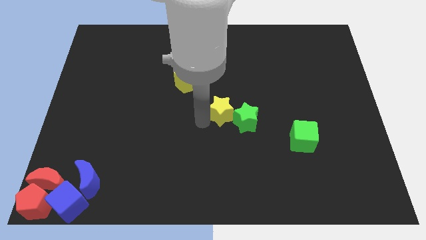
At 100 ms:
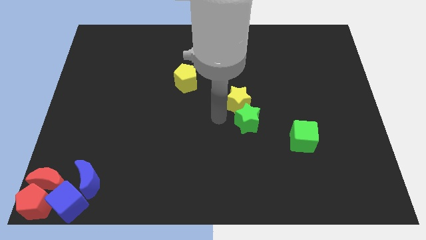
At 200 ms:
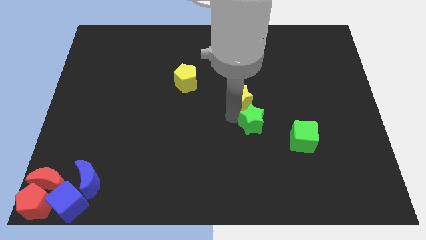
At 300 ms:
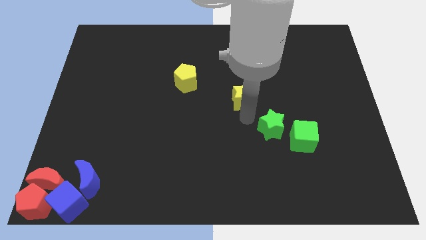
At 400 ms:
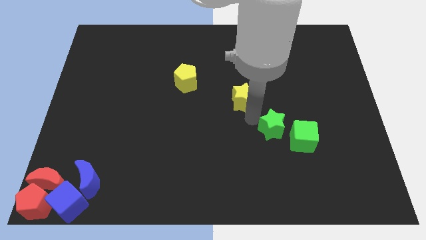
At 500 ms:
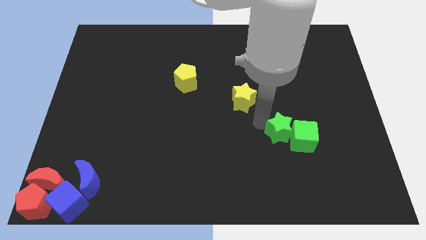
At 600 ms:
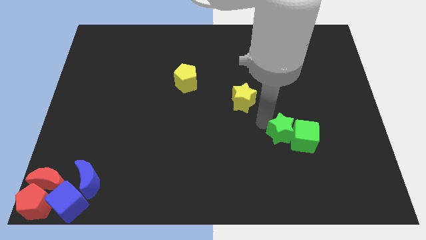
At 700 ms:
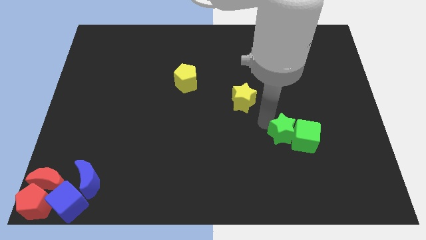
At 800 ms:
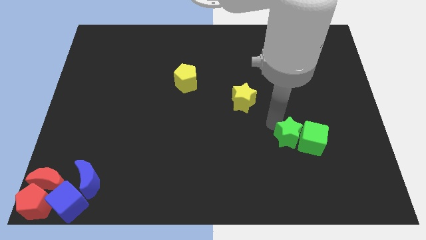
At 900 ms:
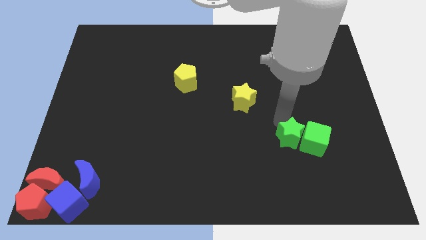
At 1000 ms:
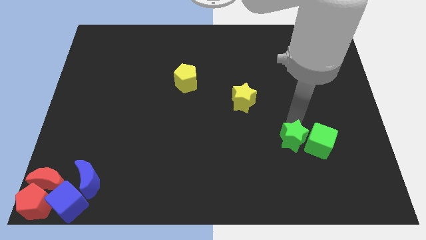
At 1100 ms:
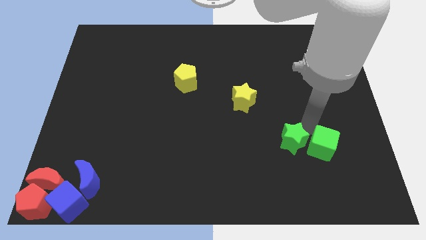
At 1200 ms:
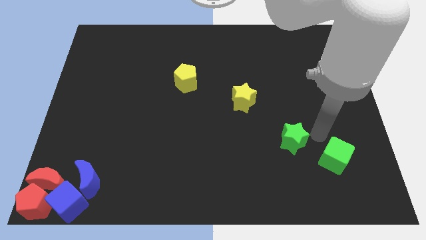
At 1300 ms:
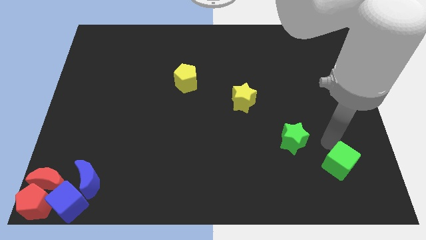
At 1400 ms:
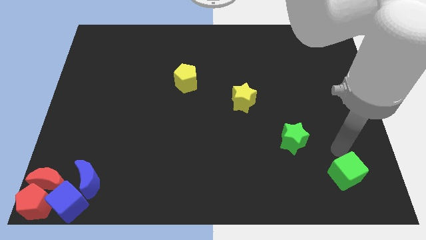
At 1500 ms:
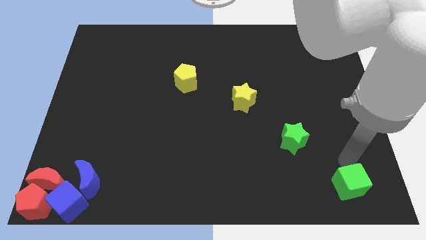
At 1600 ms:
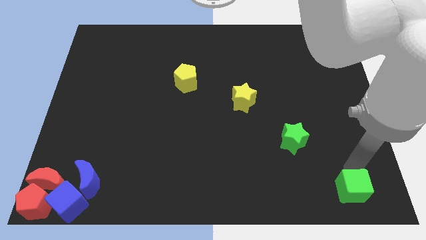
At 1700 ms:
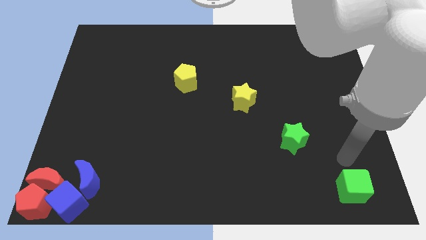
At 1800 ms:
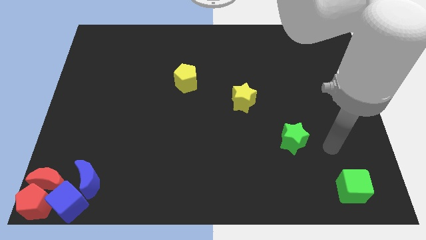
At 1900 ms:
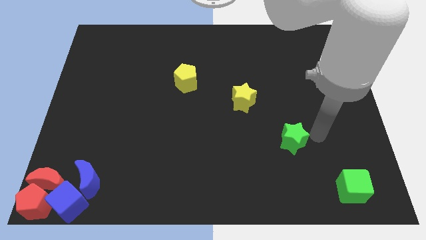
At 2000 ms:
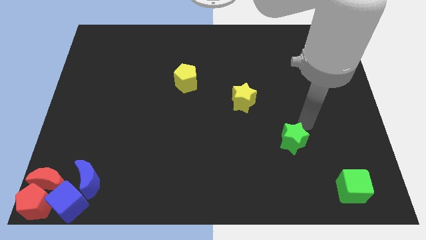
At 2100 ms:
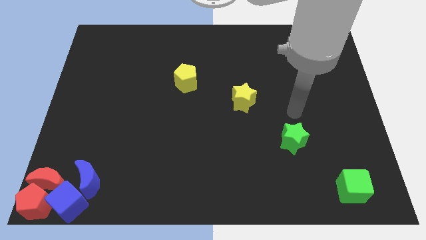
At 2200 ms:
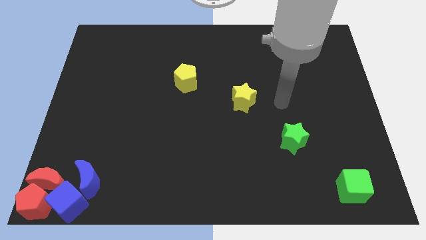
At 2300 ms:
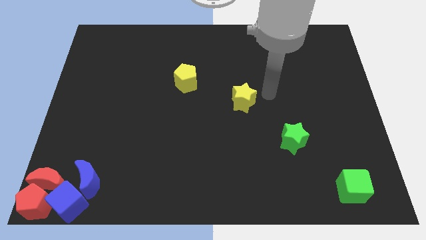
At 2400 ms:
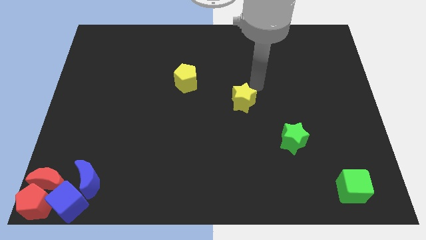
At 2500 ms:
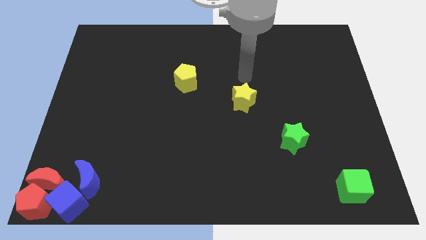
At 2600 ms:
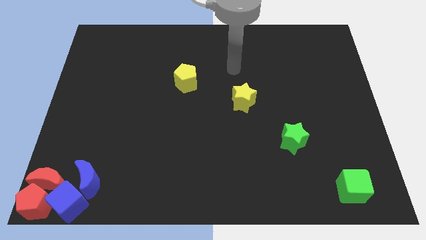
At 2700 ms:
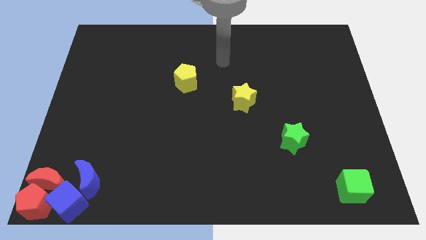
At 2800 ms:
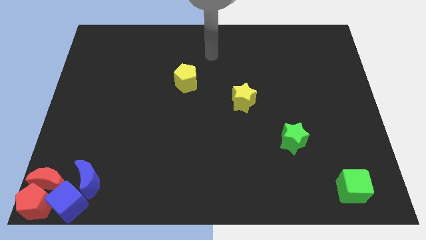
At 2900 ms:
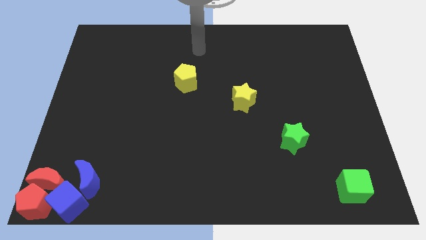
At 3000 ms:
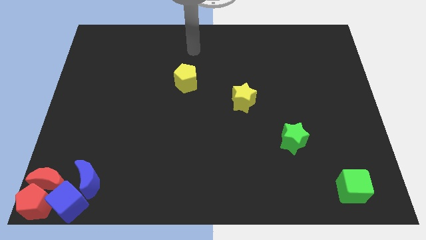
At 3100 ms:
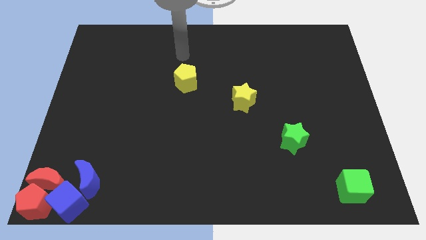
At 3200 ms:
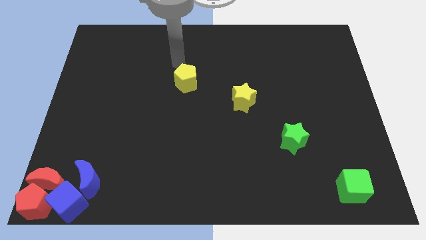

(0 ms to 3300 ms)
move the yellow star green star and green cube to the bottom right side of the yellow pentagon

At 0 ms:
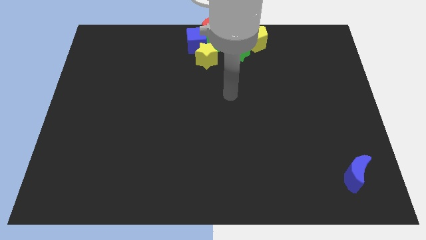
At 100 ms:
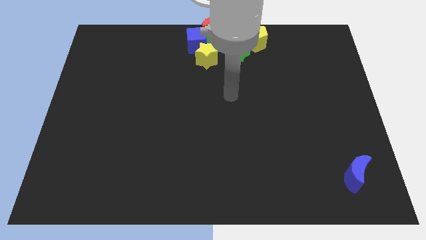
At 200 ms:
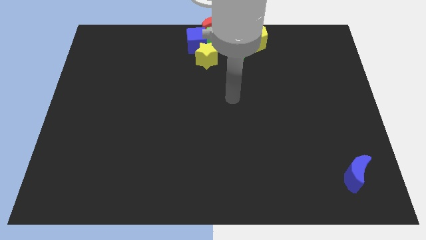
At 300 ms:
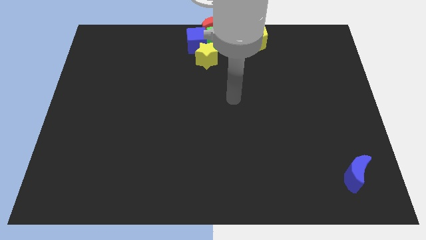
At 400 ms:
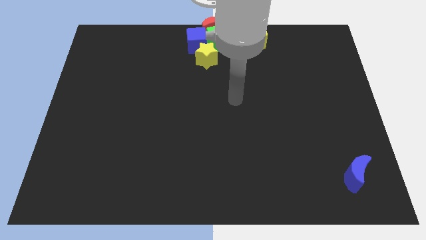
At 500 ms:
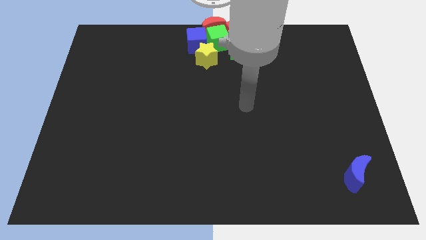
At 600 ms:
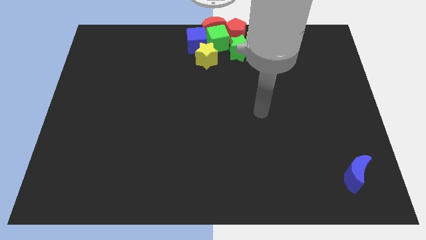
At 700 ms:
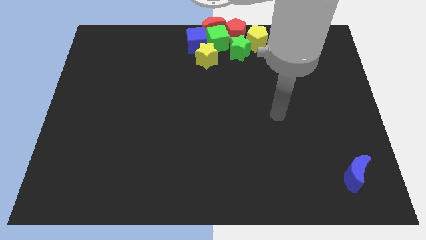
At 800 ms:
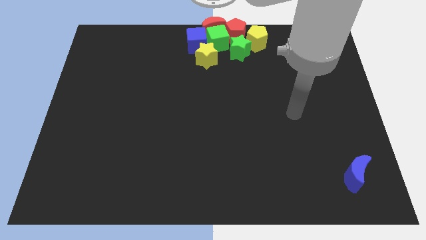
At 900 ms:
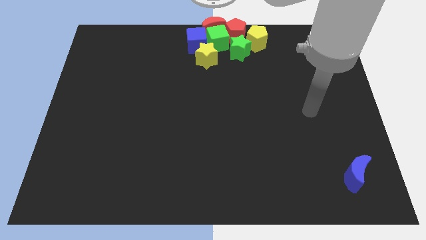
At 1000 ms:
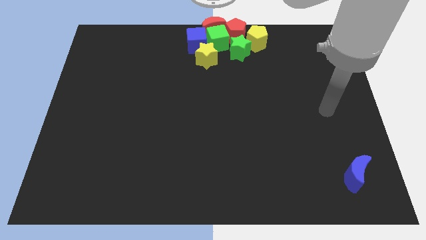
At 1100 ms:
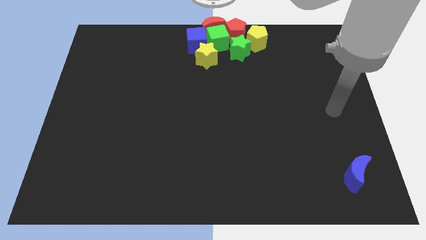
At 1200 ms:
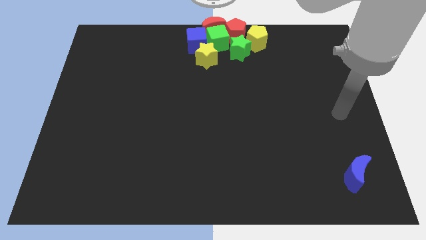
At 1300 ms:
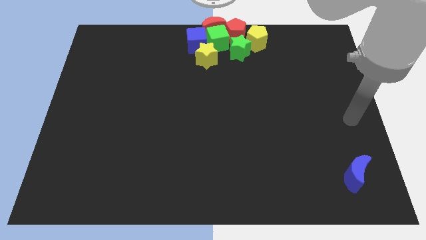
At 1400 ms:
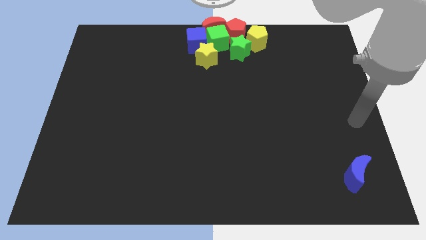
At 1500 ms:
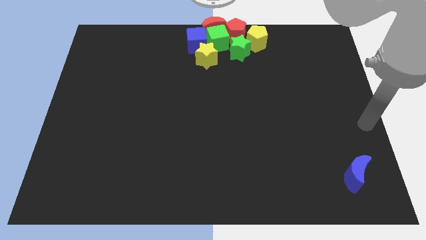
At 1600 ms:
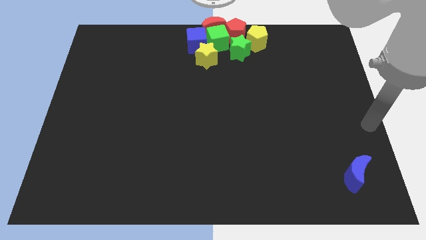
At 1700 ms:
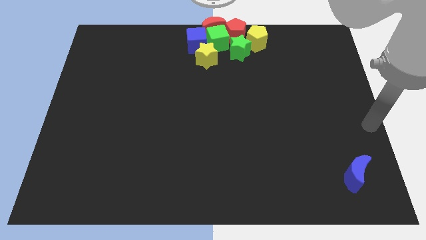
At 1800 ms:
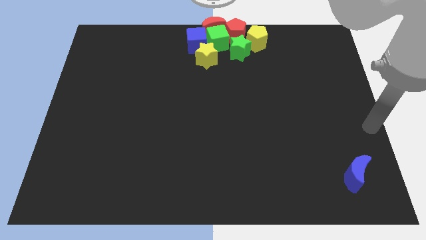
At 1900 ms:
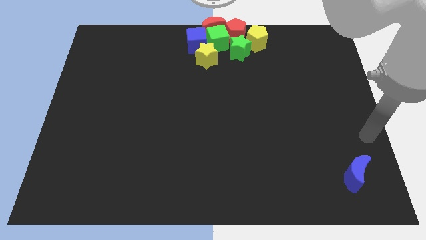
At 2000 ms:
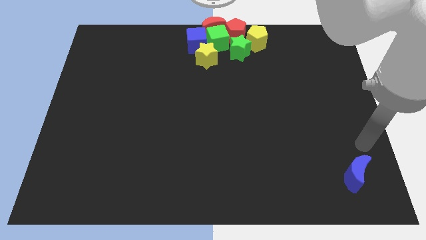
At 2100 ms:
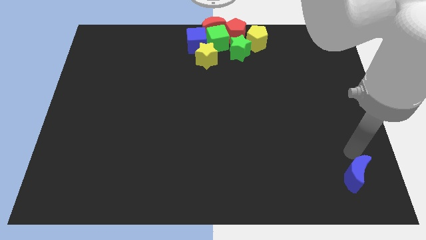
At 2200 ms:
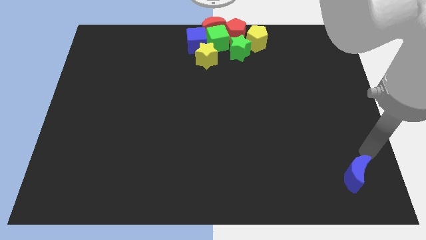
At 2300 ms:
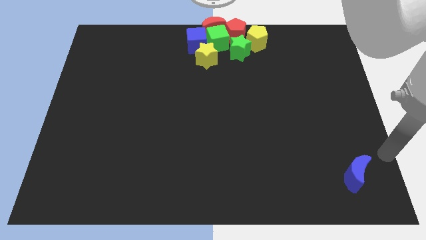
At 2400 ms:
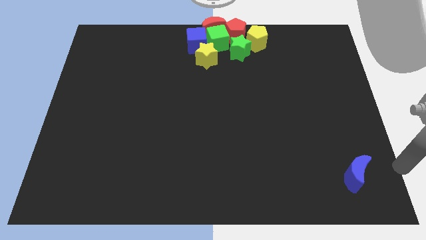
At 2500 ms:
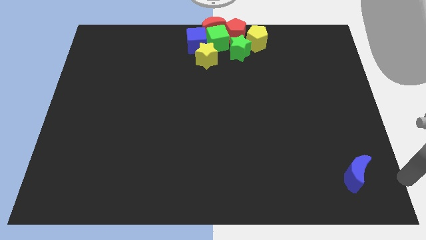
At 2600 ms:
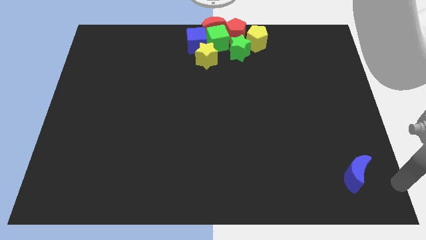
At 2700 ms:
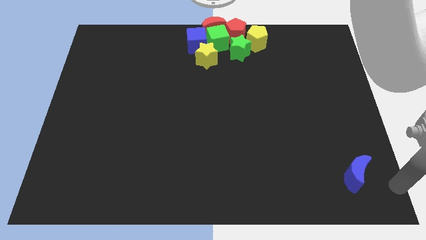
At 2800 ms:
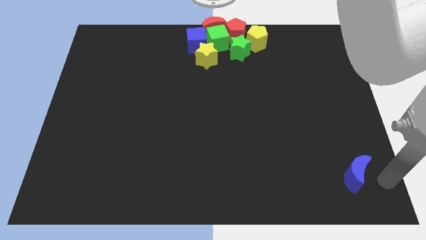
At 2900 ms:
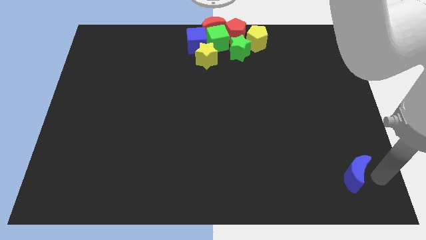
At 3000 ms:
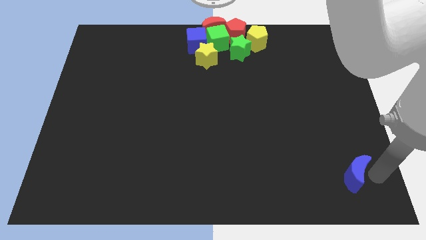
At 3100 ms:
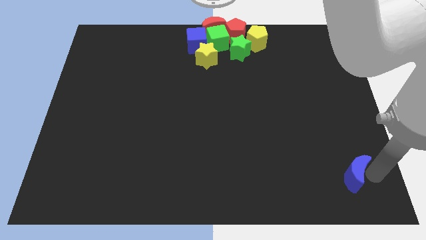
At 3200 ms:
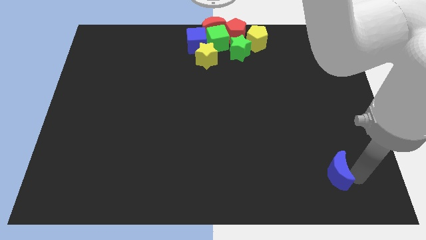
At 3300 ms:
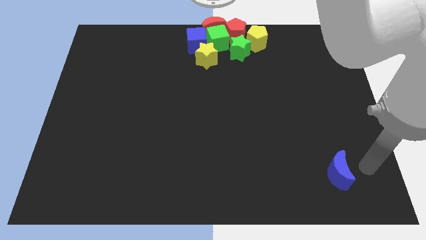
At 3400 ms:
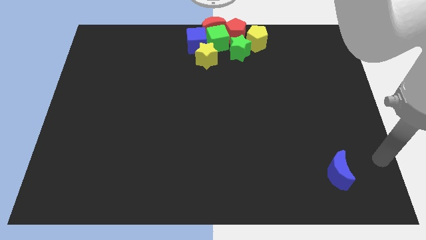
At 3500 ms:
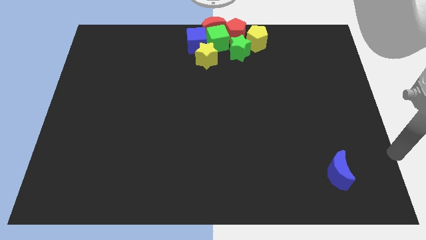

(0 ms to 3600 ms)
move the blue crescent slightly left

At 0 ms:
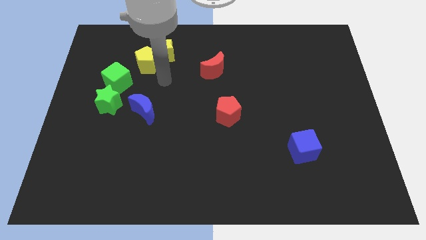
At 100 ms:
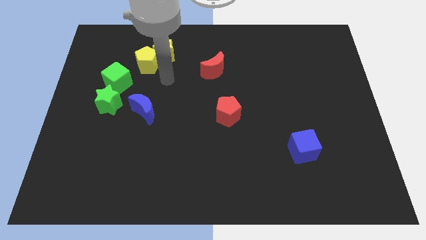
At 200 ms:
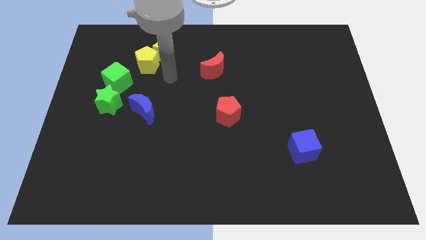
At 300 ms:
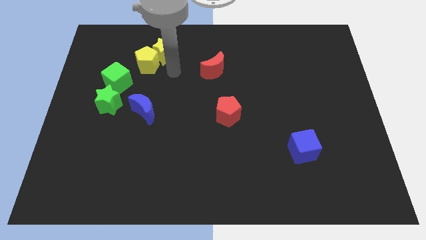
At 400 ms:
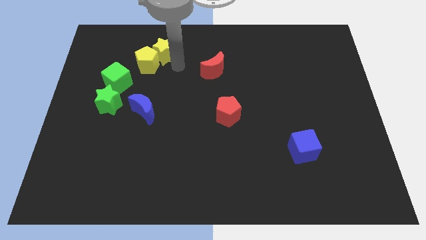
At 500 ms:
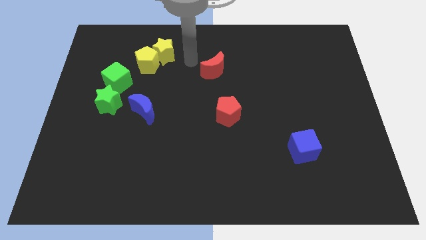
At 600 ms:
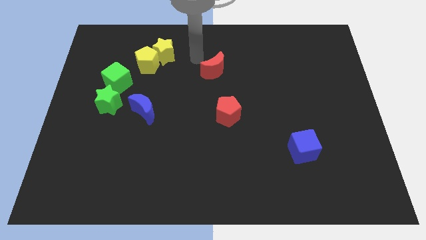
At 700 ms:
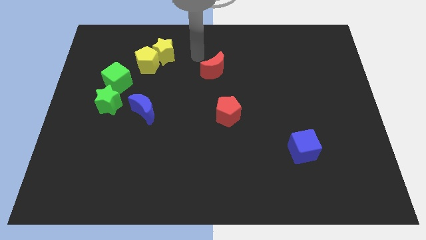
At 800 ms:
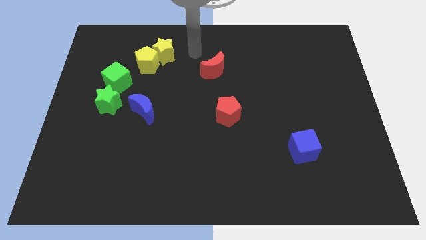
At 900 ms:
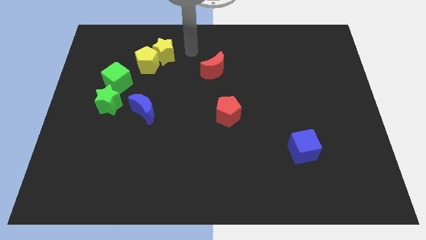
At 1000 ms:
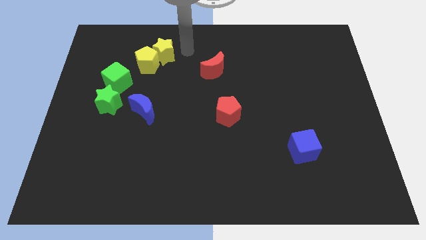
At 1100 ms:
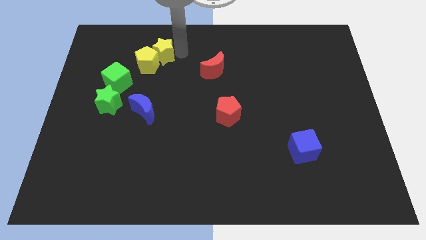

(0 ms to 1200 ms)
move arm to the yellow star

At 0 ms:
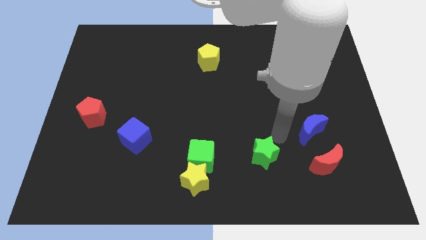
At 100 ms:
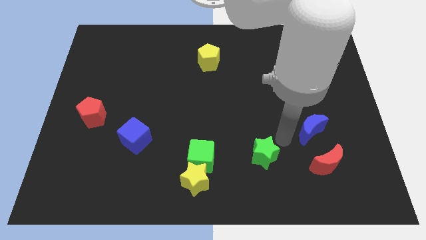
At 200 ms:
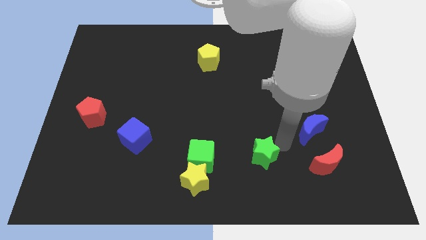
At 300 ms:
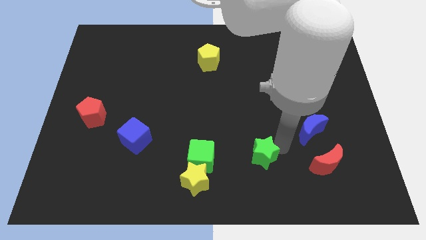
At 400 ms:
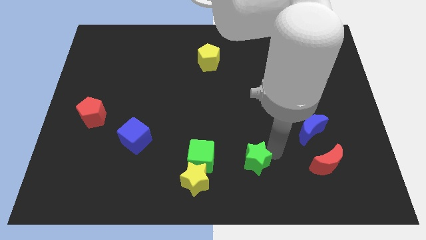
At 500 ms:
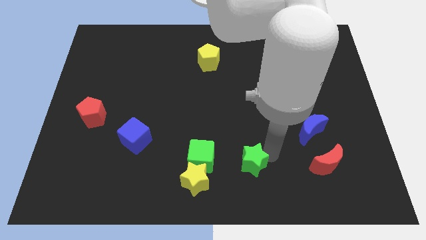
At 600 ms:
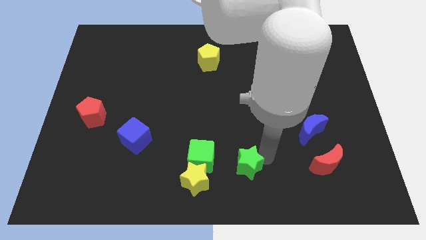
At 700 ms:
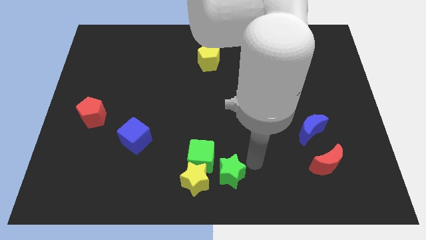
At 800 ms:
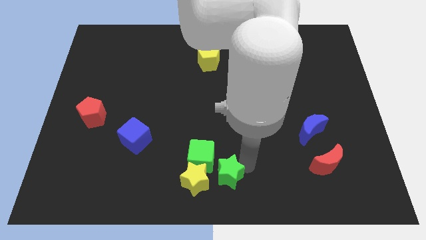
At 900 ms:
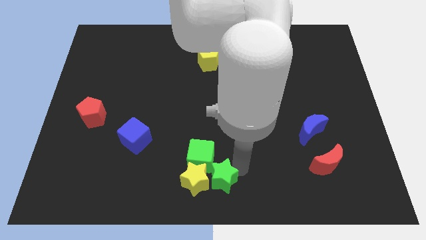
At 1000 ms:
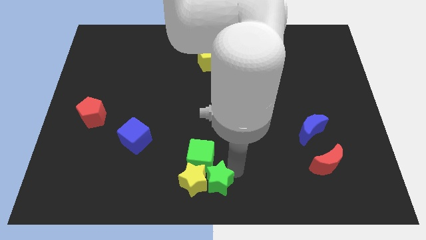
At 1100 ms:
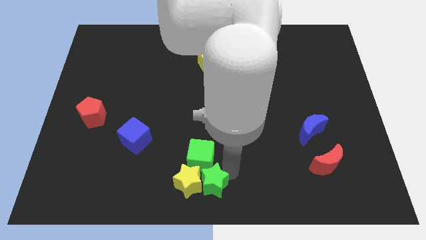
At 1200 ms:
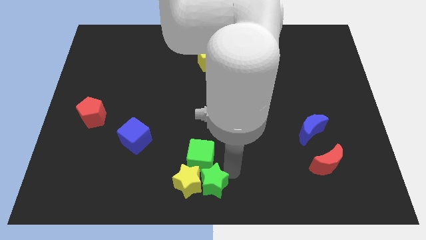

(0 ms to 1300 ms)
push the green star to the right of the yellow star
